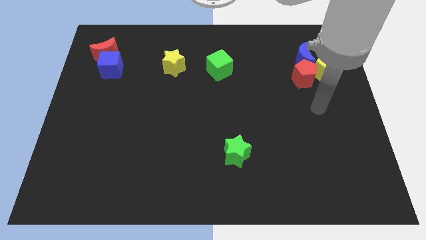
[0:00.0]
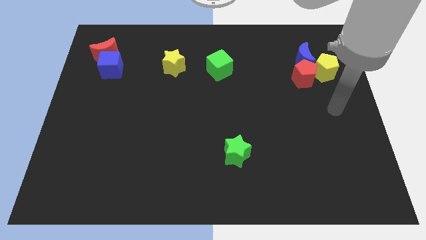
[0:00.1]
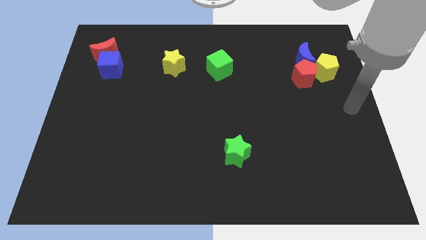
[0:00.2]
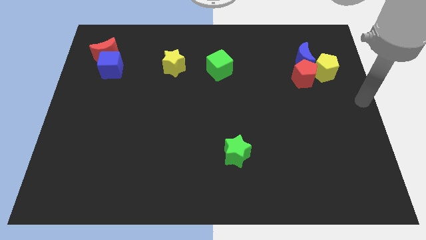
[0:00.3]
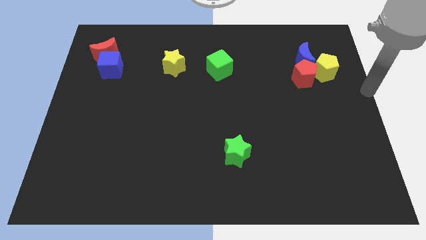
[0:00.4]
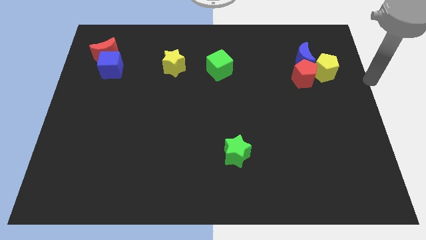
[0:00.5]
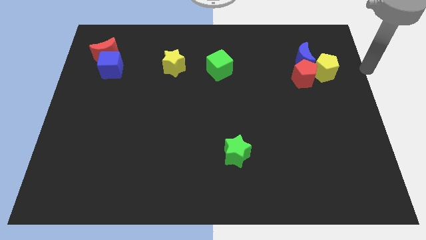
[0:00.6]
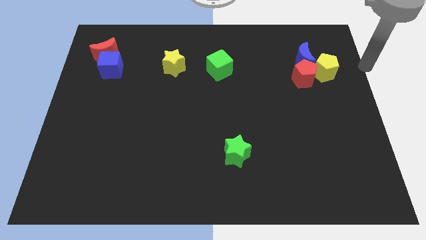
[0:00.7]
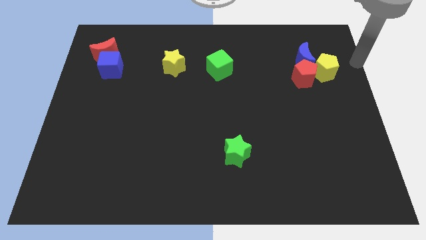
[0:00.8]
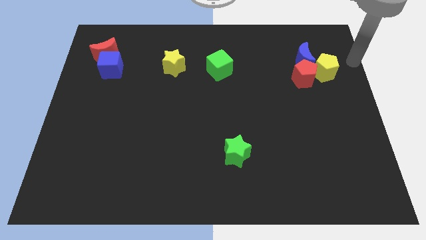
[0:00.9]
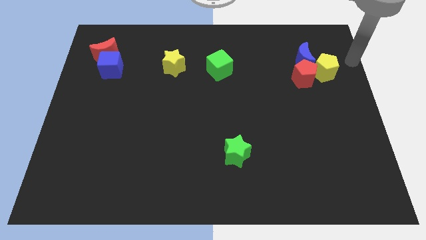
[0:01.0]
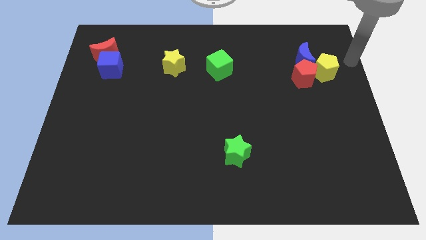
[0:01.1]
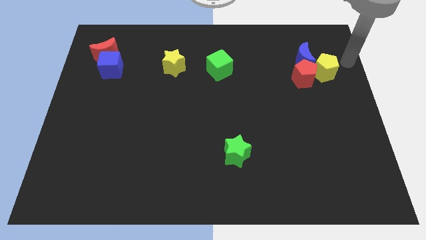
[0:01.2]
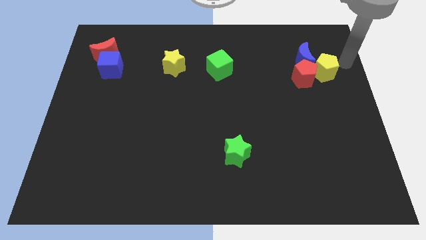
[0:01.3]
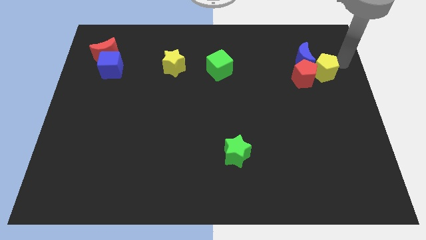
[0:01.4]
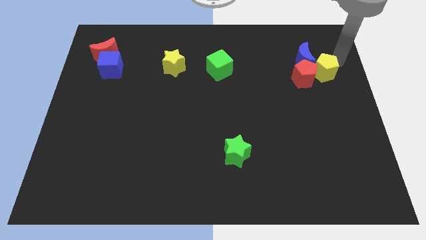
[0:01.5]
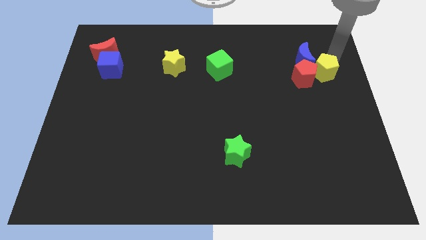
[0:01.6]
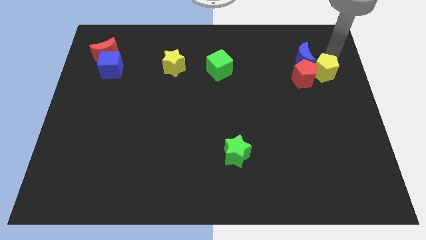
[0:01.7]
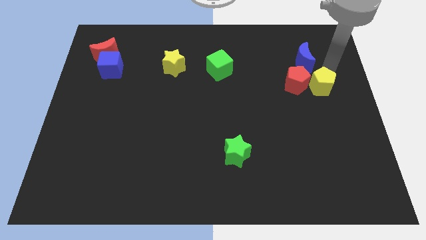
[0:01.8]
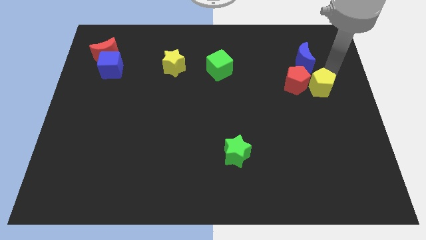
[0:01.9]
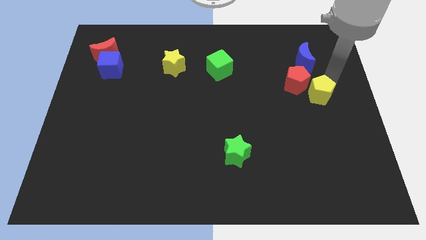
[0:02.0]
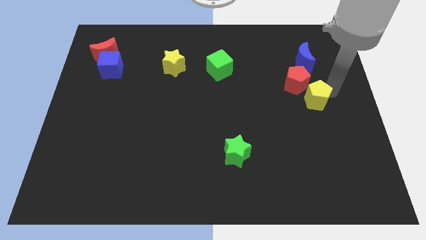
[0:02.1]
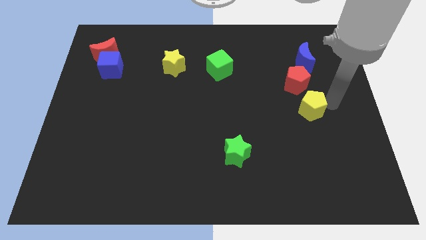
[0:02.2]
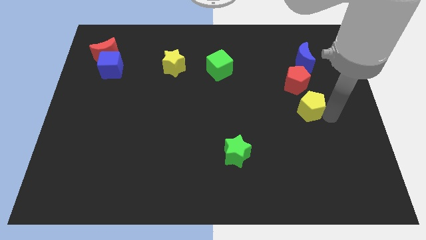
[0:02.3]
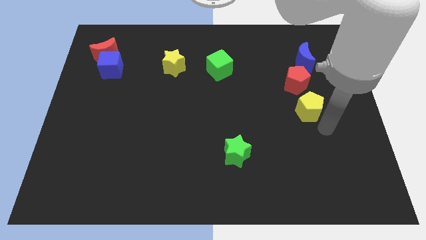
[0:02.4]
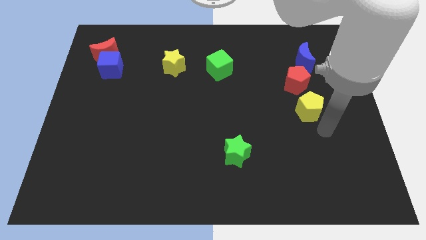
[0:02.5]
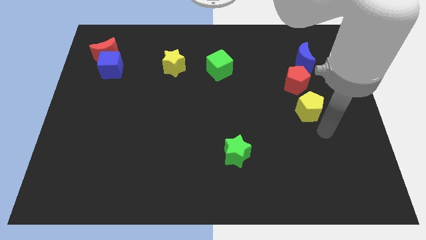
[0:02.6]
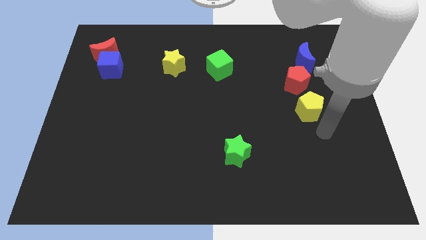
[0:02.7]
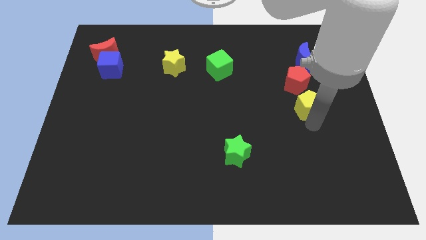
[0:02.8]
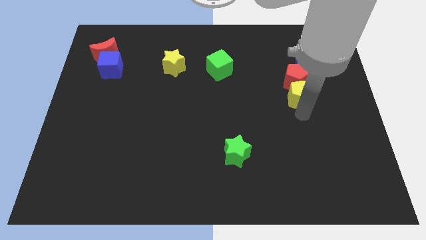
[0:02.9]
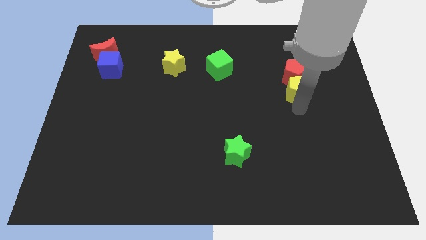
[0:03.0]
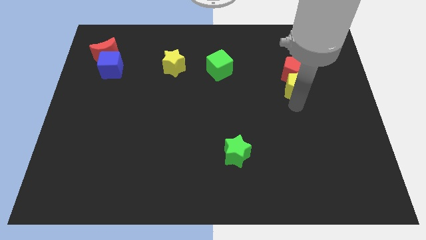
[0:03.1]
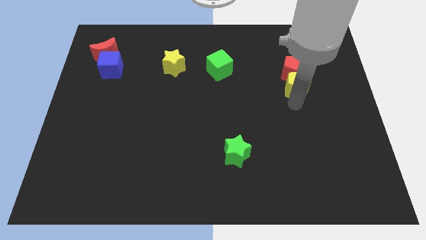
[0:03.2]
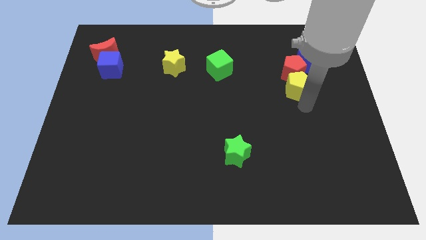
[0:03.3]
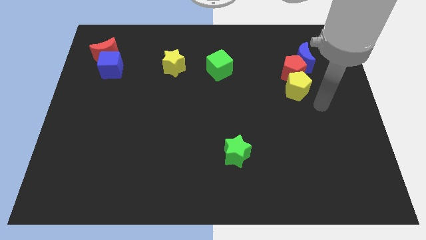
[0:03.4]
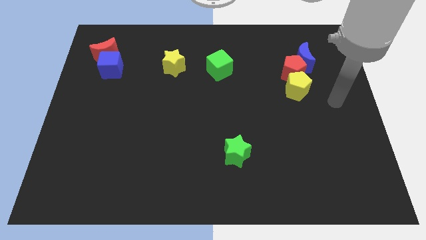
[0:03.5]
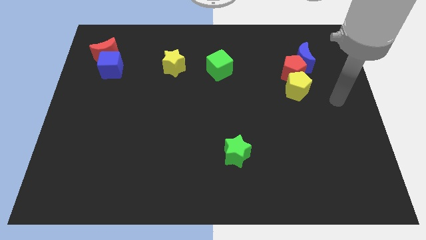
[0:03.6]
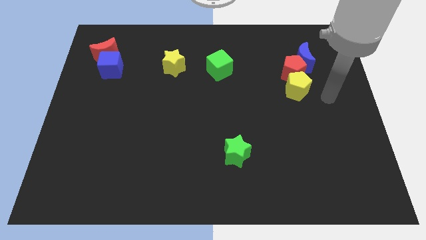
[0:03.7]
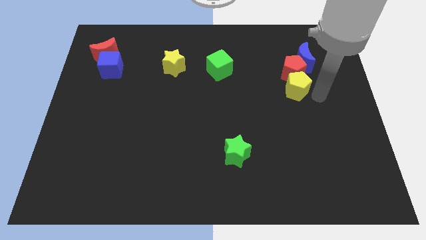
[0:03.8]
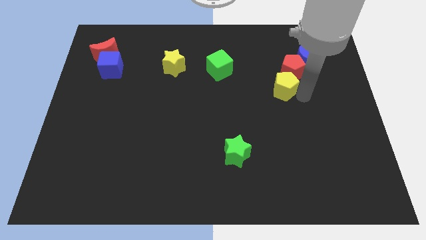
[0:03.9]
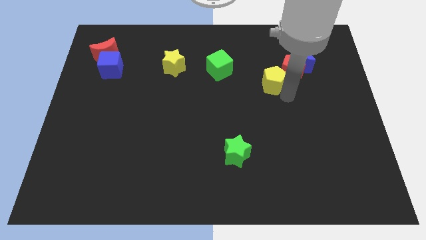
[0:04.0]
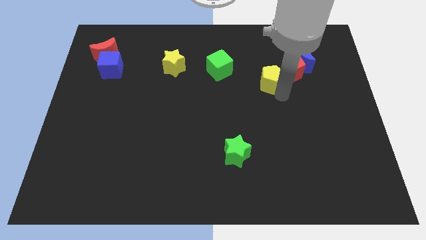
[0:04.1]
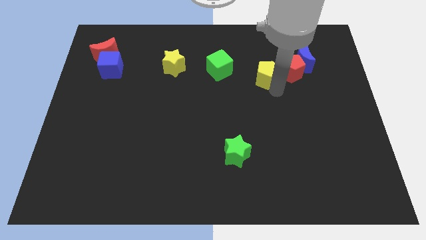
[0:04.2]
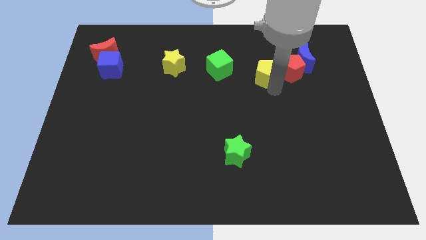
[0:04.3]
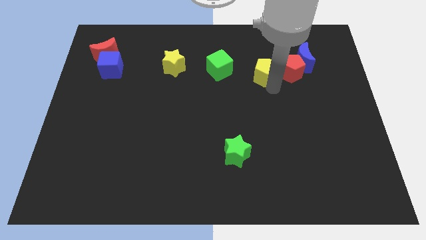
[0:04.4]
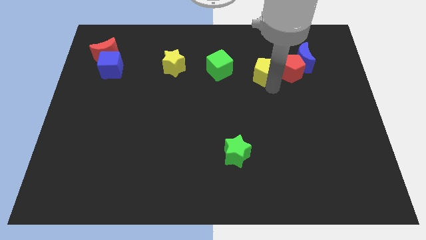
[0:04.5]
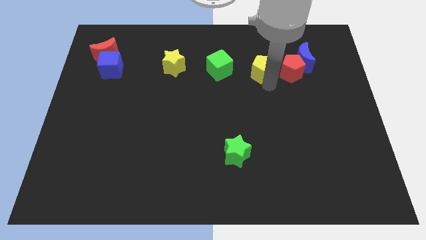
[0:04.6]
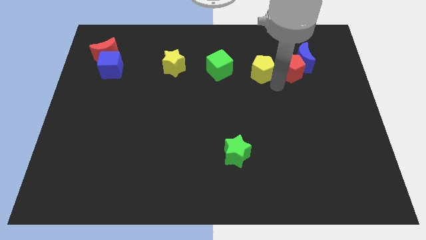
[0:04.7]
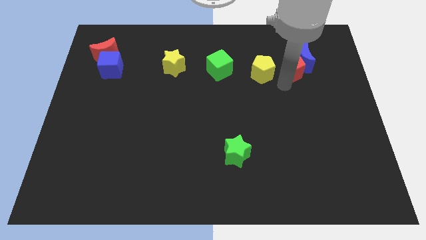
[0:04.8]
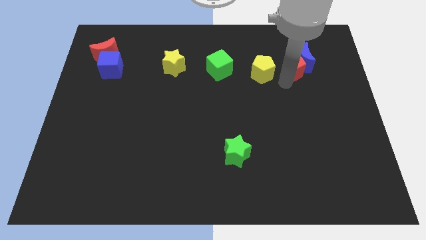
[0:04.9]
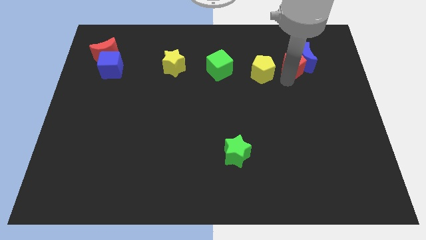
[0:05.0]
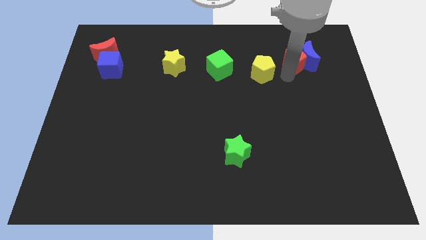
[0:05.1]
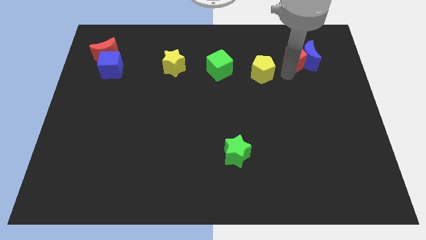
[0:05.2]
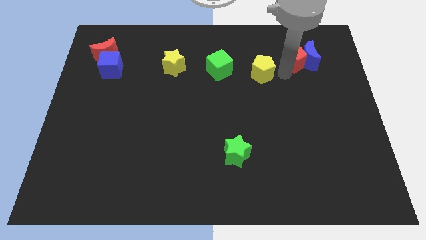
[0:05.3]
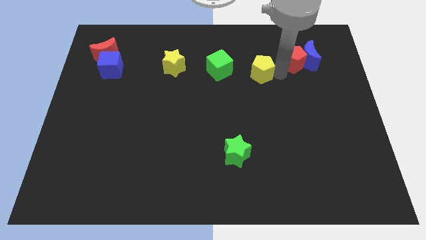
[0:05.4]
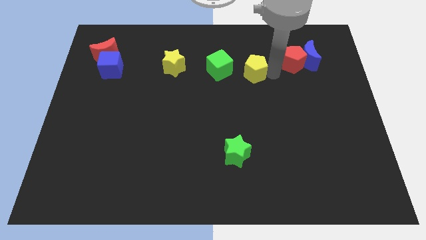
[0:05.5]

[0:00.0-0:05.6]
move the yellow pentagon right beside the green cube

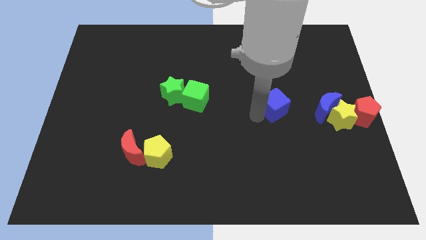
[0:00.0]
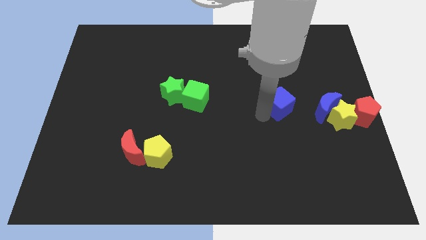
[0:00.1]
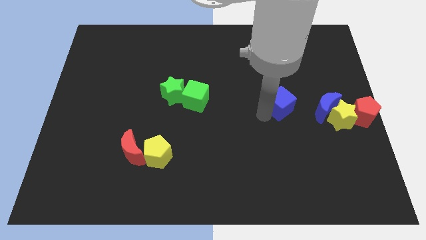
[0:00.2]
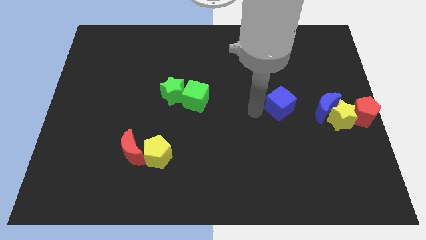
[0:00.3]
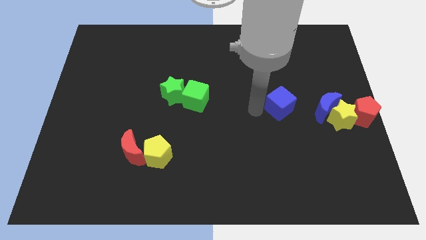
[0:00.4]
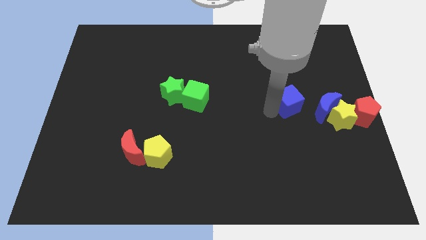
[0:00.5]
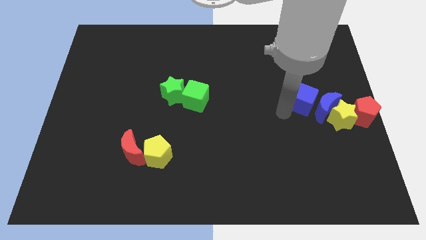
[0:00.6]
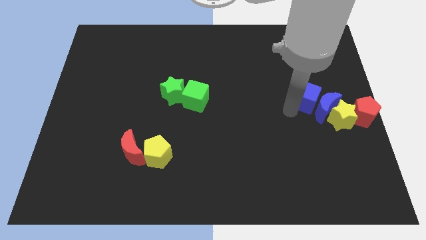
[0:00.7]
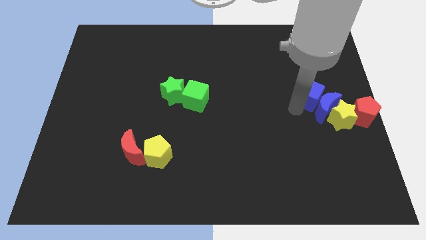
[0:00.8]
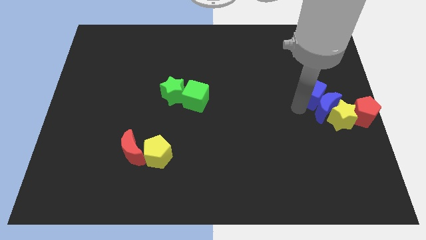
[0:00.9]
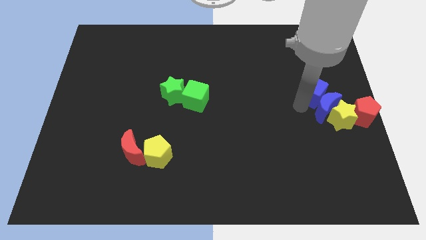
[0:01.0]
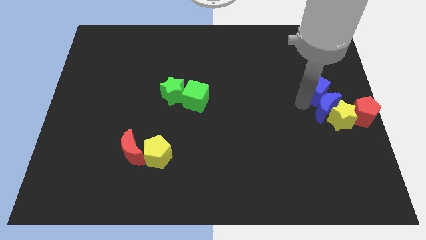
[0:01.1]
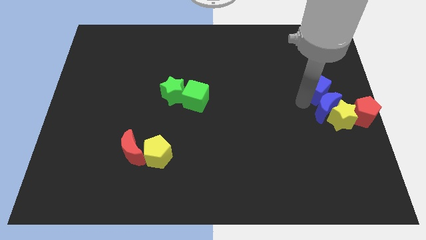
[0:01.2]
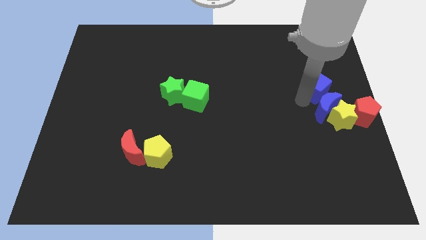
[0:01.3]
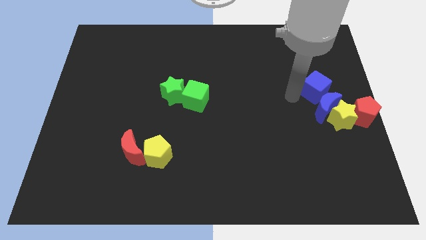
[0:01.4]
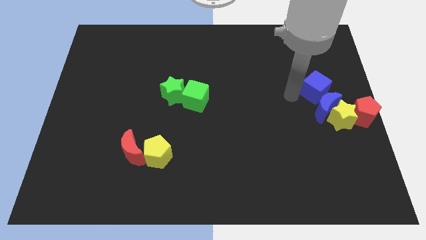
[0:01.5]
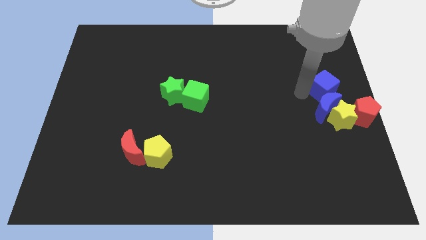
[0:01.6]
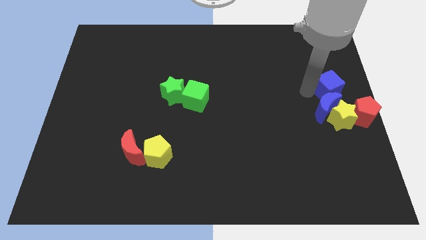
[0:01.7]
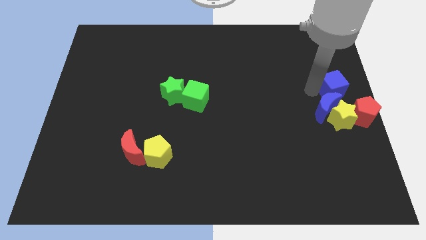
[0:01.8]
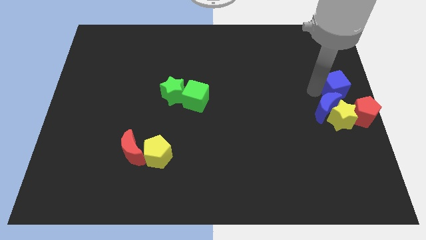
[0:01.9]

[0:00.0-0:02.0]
place blue cube to the top of blue moon

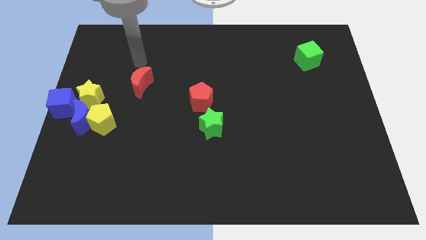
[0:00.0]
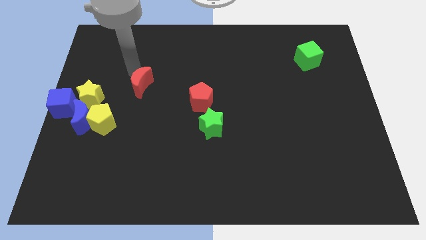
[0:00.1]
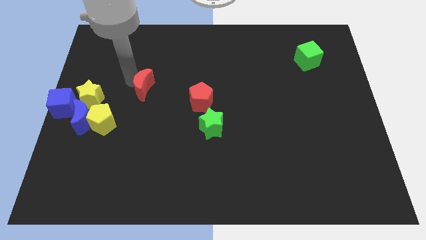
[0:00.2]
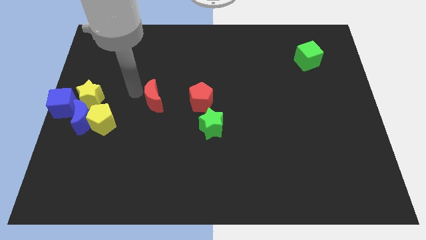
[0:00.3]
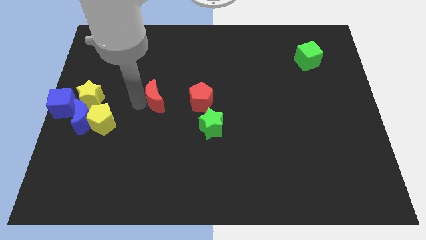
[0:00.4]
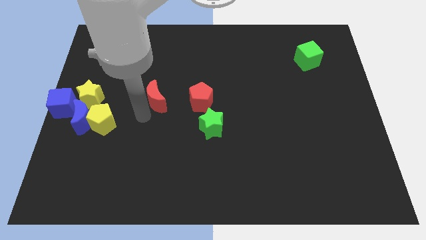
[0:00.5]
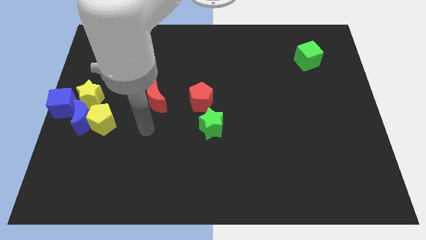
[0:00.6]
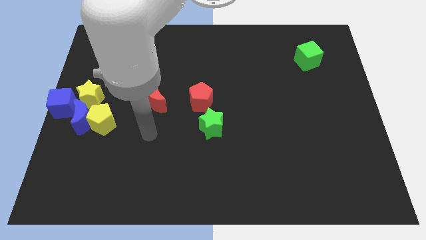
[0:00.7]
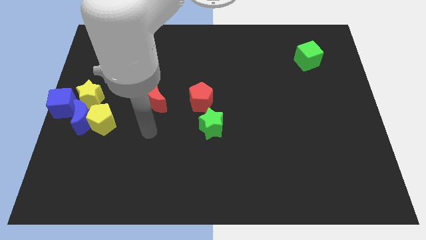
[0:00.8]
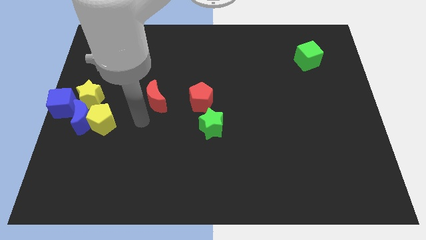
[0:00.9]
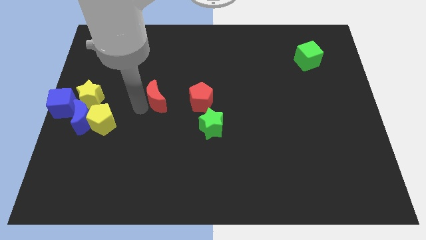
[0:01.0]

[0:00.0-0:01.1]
slide red crescent down to the left of red pentagon

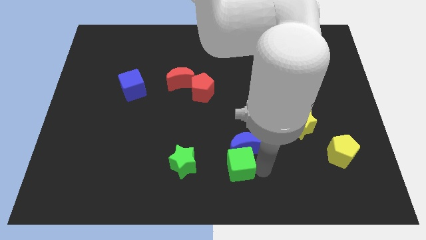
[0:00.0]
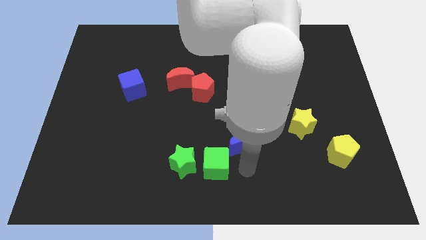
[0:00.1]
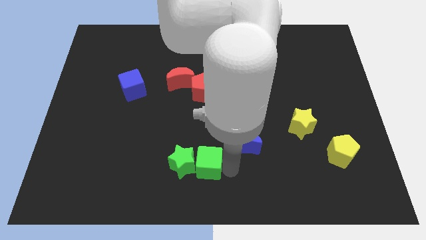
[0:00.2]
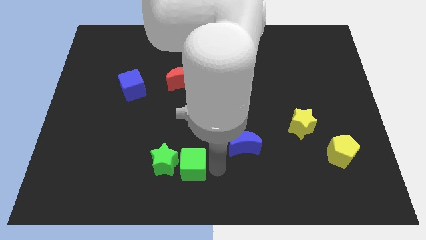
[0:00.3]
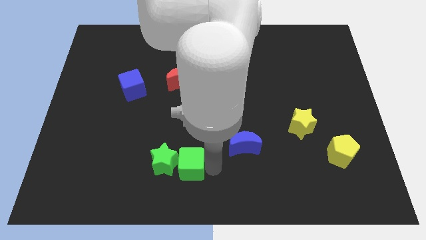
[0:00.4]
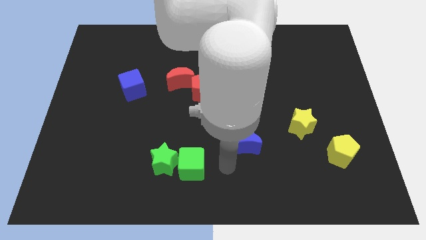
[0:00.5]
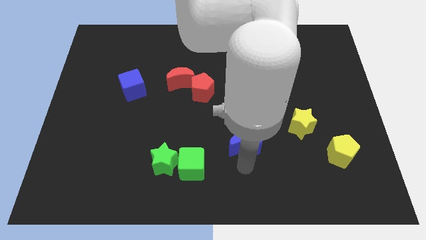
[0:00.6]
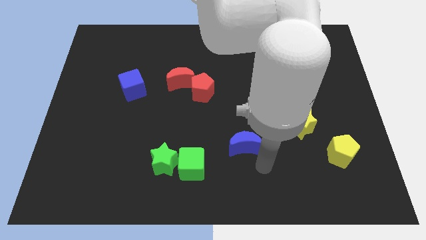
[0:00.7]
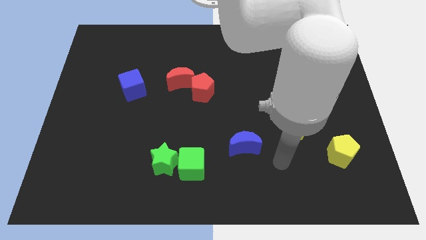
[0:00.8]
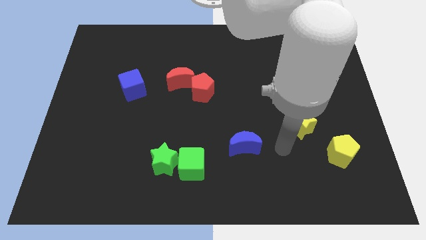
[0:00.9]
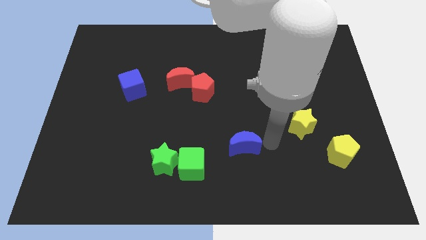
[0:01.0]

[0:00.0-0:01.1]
move green cube into green star
